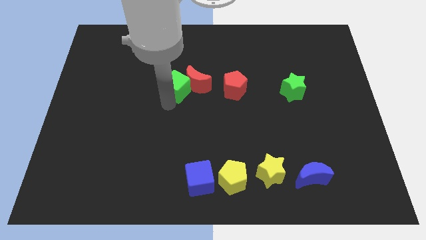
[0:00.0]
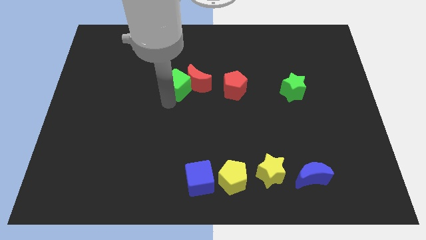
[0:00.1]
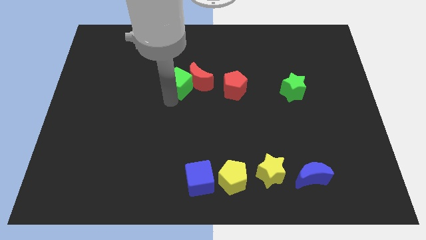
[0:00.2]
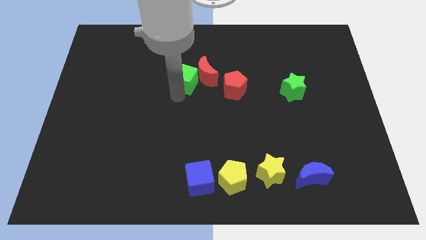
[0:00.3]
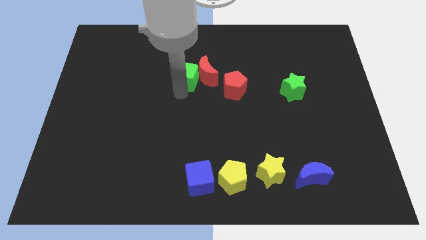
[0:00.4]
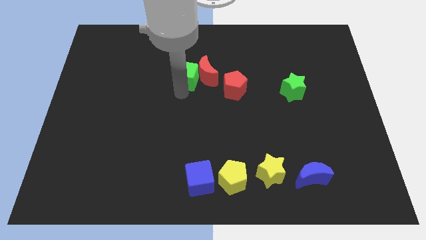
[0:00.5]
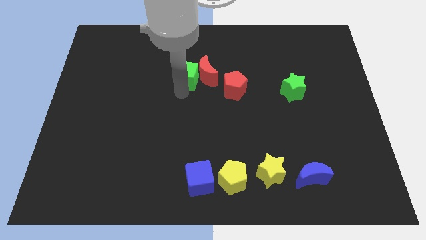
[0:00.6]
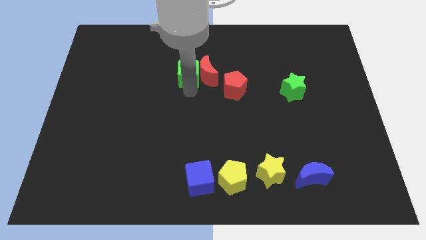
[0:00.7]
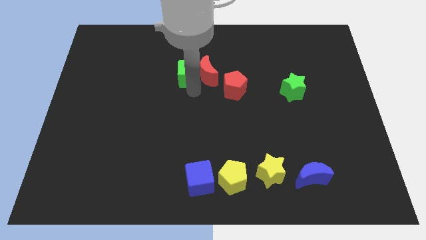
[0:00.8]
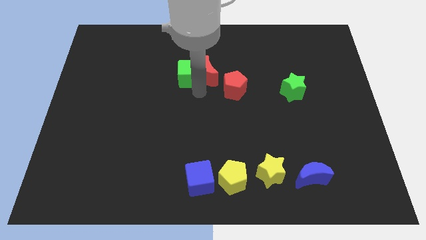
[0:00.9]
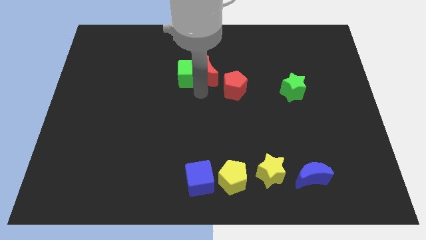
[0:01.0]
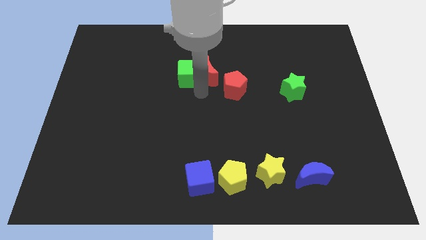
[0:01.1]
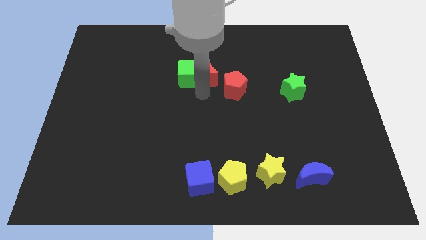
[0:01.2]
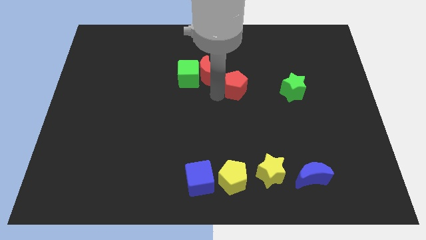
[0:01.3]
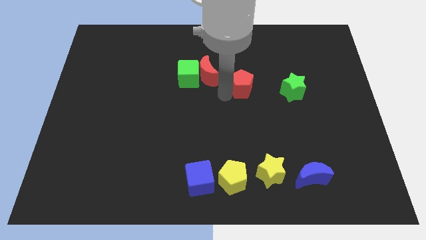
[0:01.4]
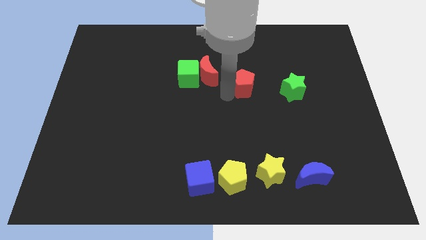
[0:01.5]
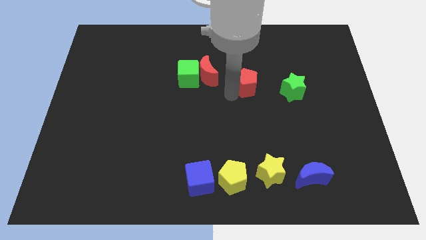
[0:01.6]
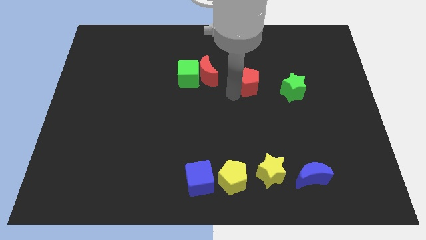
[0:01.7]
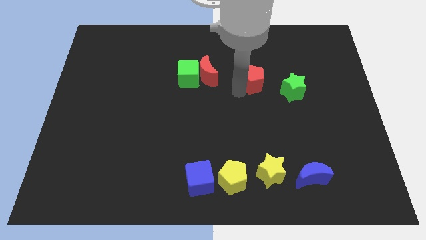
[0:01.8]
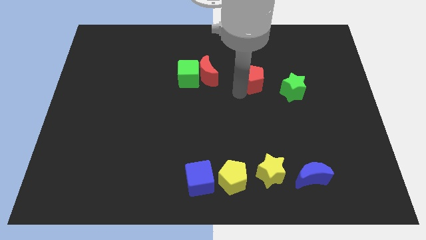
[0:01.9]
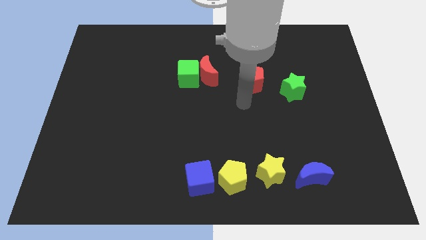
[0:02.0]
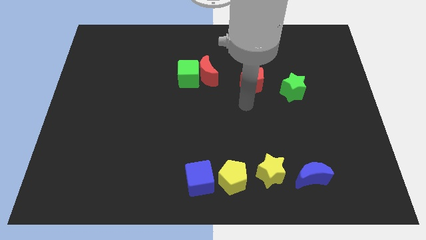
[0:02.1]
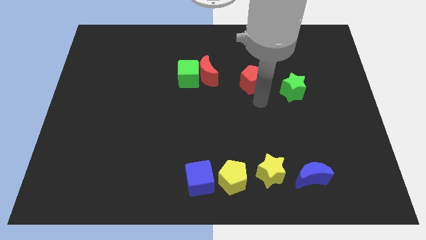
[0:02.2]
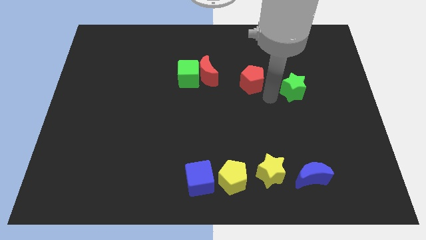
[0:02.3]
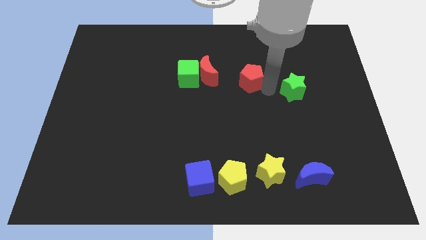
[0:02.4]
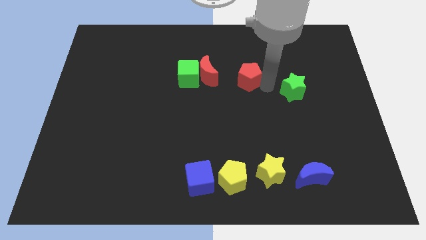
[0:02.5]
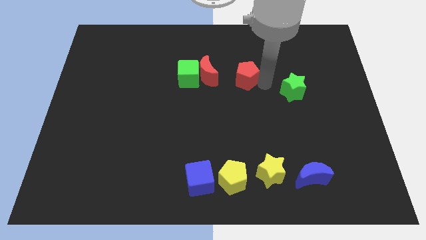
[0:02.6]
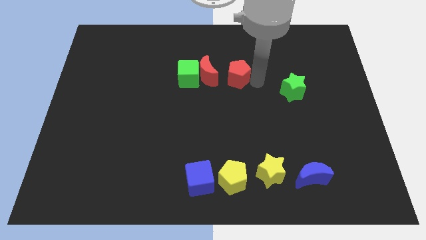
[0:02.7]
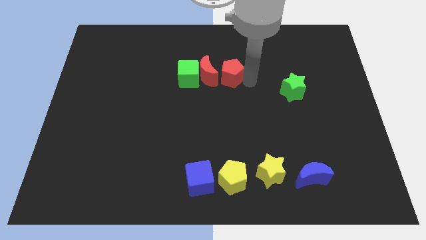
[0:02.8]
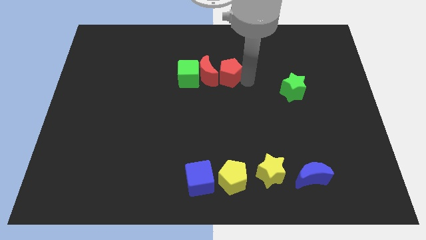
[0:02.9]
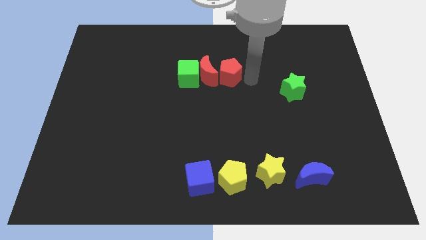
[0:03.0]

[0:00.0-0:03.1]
push green cube red moon and red pentagon in a horizontal line

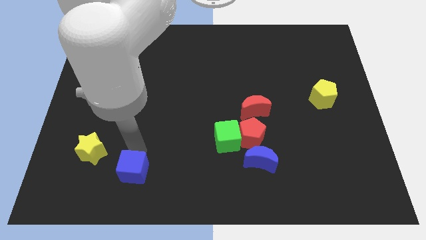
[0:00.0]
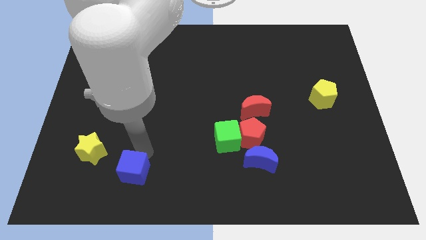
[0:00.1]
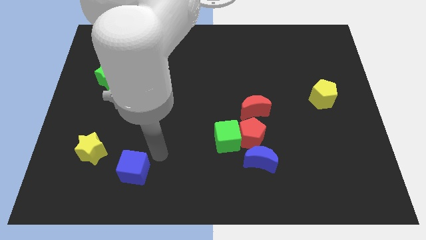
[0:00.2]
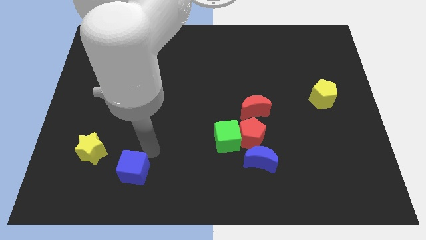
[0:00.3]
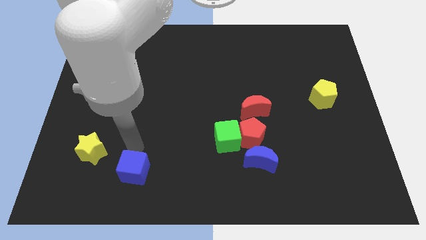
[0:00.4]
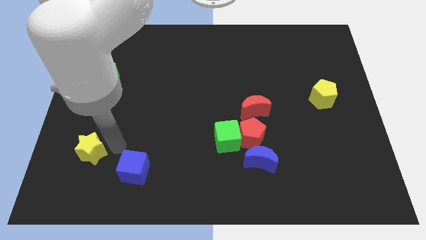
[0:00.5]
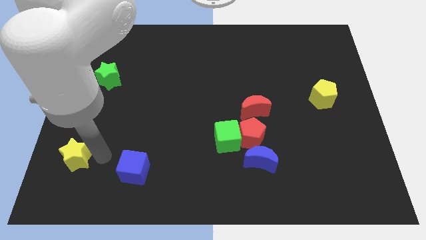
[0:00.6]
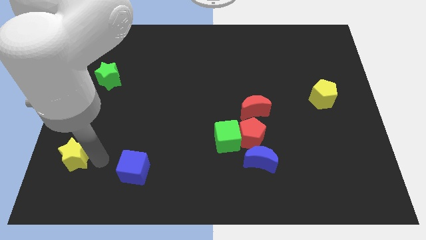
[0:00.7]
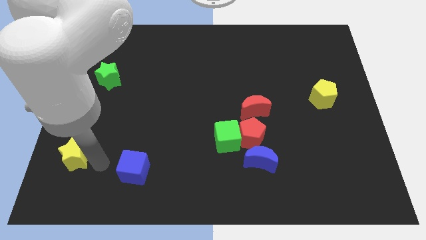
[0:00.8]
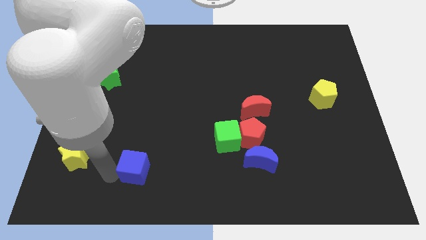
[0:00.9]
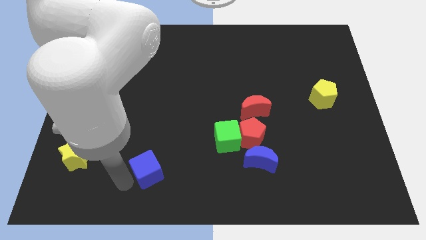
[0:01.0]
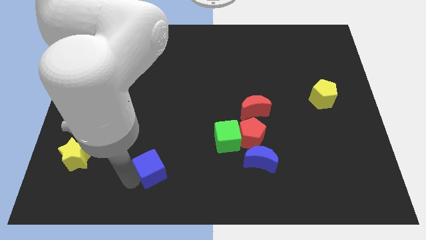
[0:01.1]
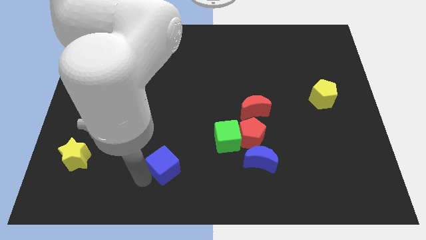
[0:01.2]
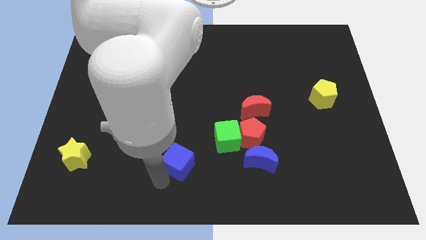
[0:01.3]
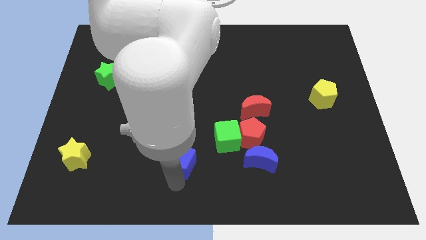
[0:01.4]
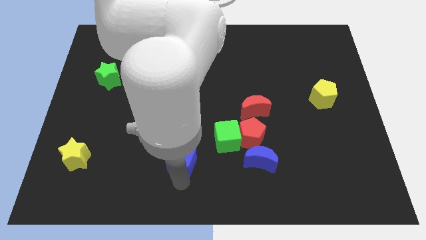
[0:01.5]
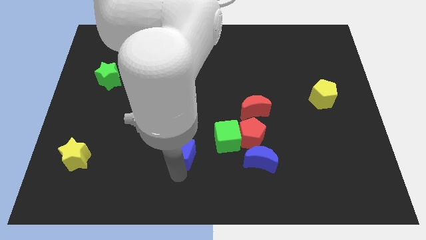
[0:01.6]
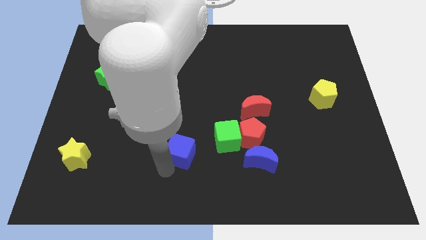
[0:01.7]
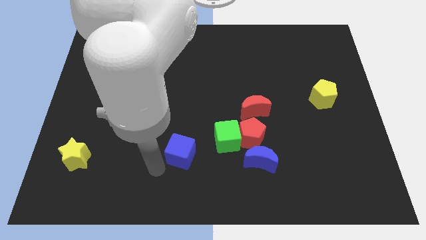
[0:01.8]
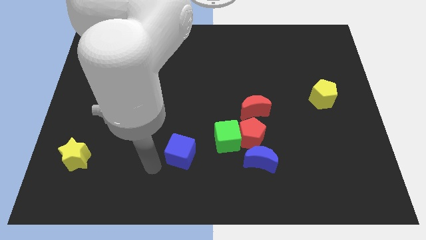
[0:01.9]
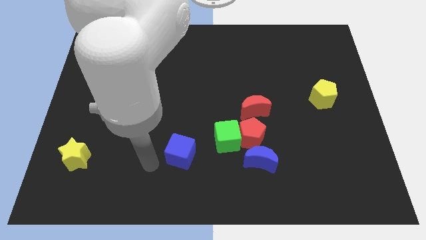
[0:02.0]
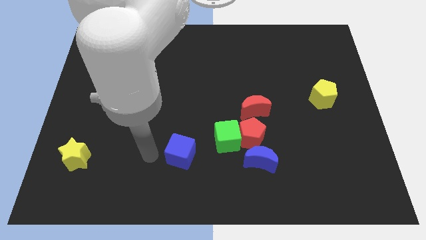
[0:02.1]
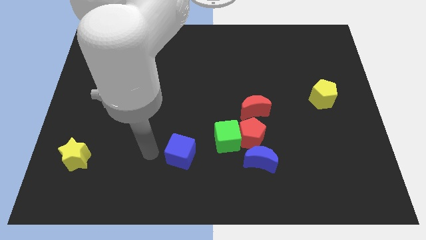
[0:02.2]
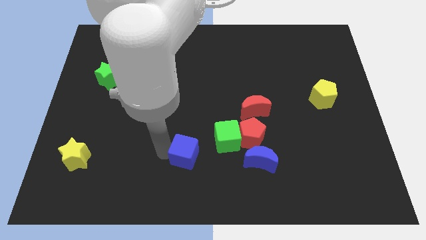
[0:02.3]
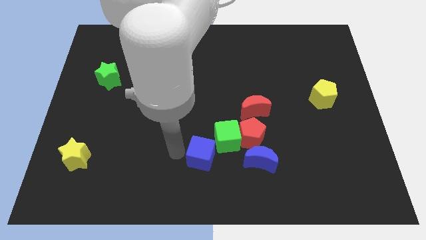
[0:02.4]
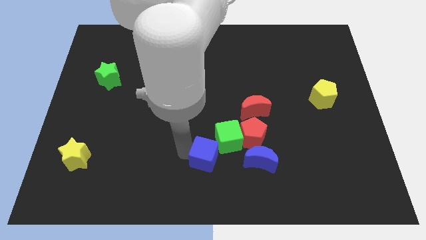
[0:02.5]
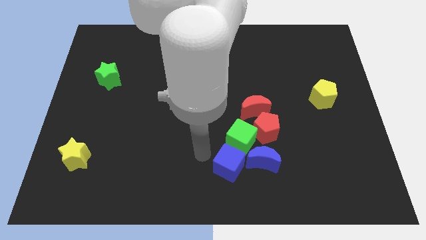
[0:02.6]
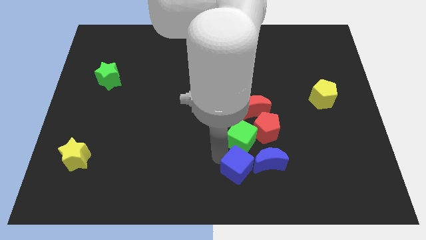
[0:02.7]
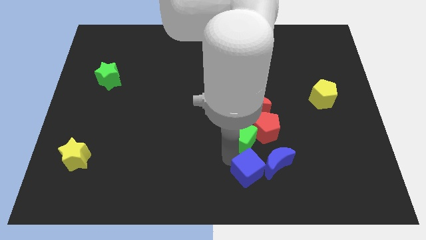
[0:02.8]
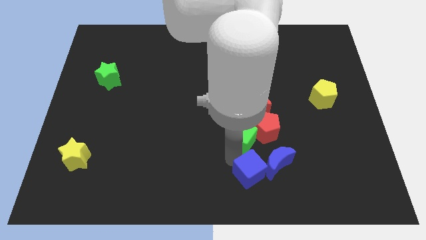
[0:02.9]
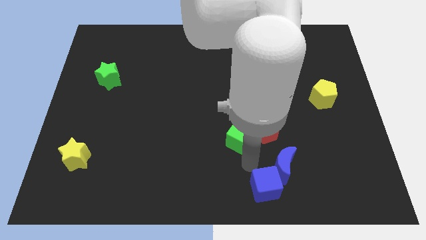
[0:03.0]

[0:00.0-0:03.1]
push blue cube in to blue crescent

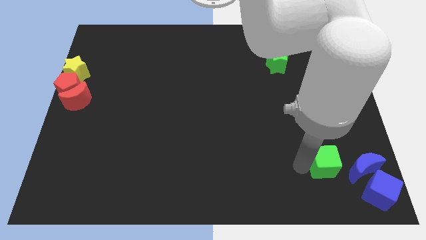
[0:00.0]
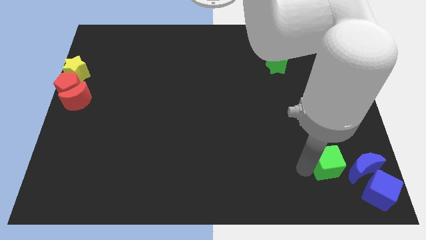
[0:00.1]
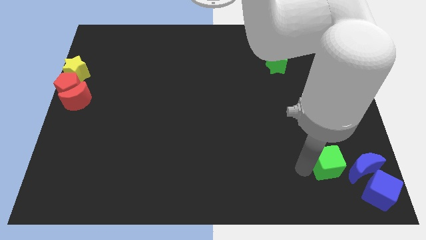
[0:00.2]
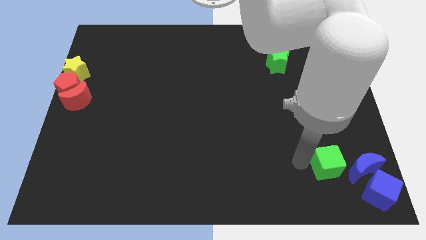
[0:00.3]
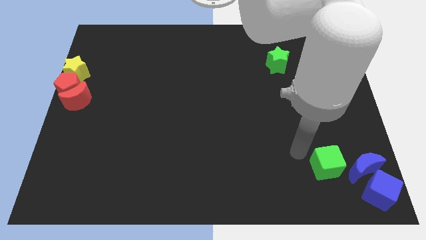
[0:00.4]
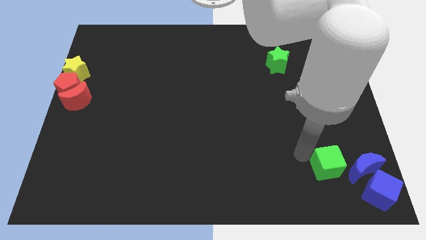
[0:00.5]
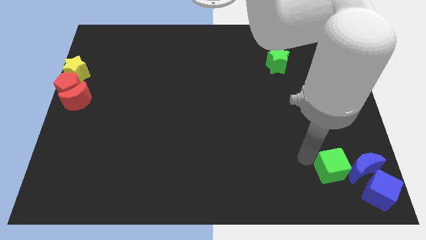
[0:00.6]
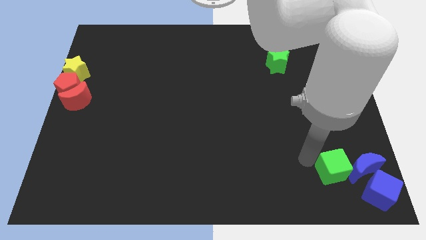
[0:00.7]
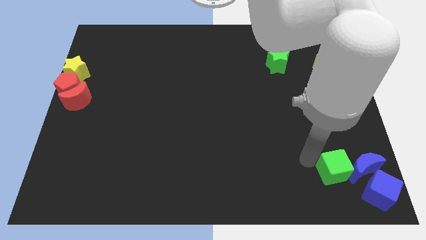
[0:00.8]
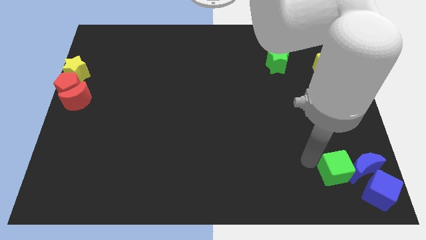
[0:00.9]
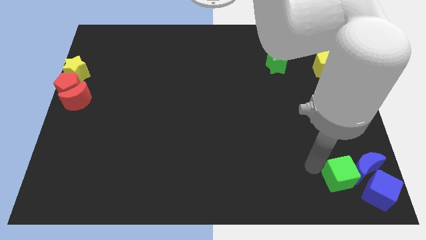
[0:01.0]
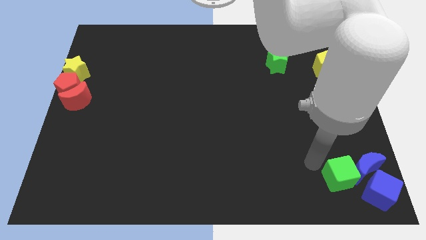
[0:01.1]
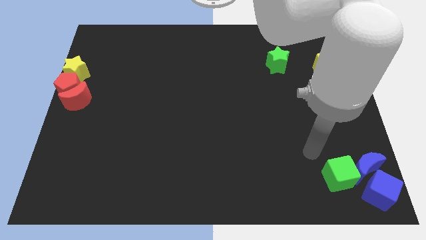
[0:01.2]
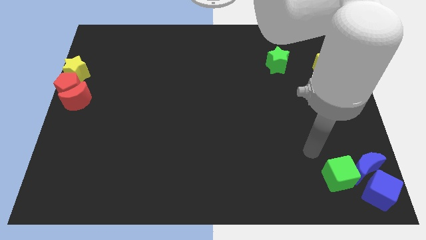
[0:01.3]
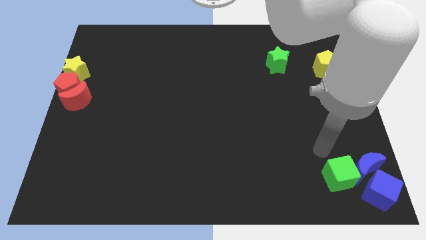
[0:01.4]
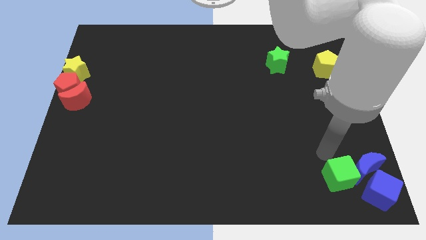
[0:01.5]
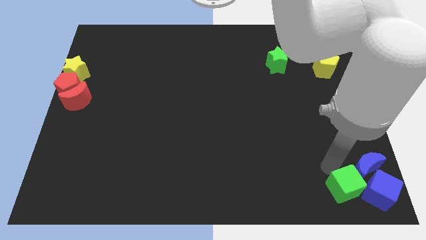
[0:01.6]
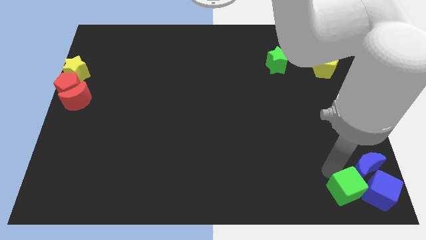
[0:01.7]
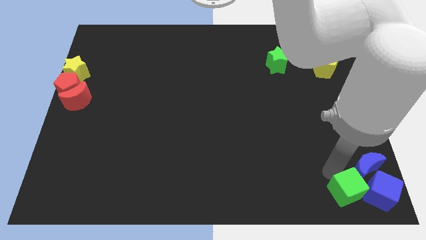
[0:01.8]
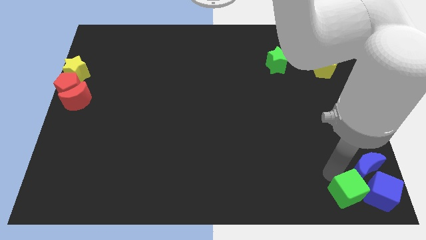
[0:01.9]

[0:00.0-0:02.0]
push the green cube into the blue cube

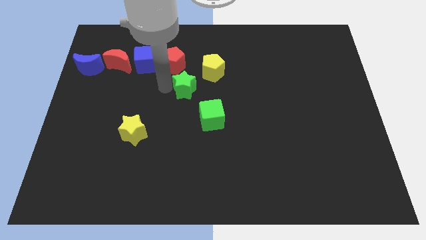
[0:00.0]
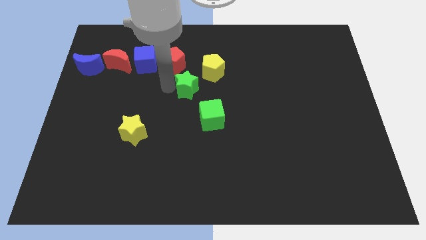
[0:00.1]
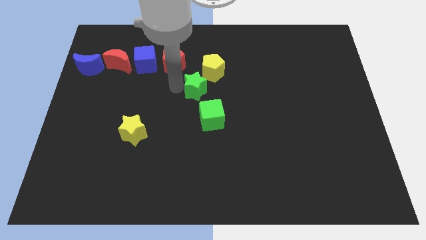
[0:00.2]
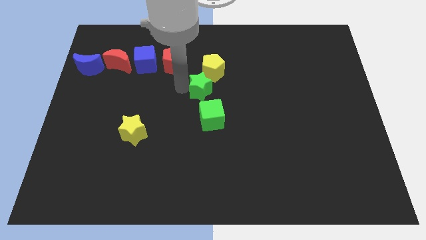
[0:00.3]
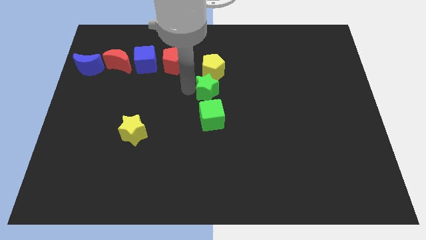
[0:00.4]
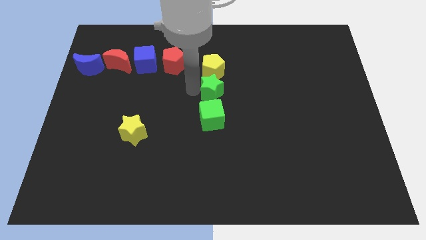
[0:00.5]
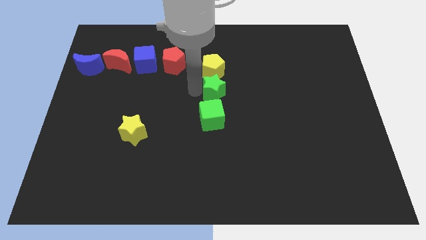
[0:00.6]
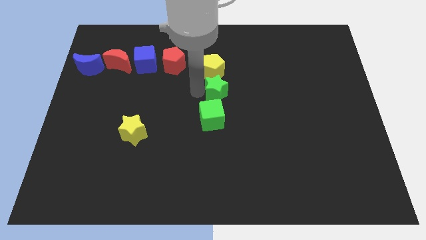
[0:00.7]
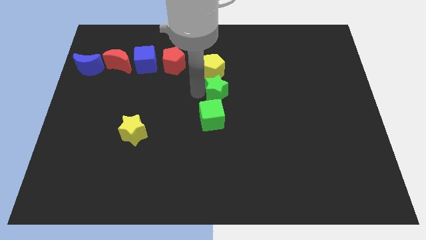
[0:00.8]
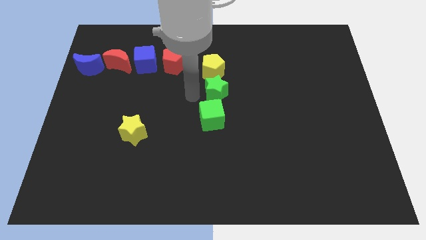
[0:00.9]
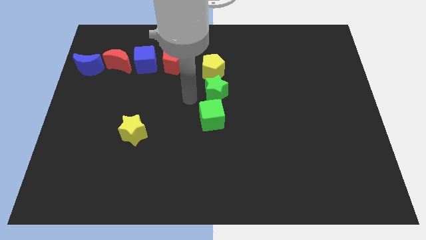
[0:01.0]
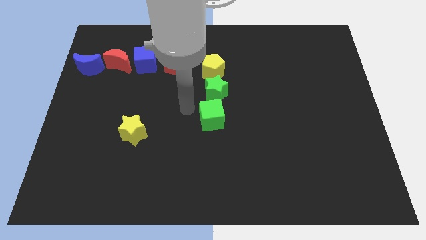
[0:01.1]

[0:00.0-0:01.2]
put the green star underneath the yellow pentagon
